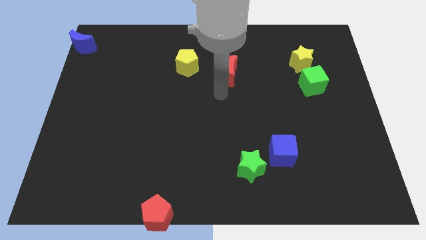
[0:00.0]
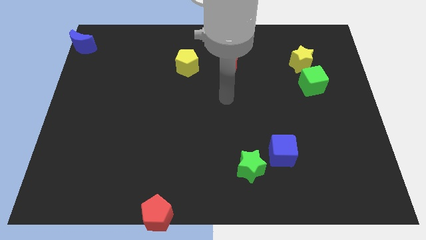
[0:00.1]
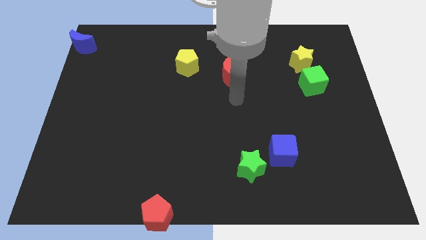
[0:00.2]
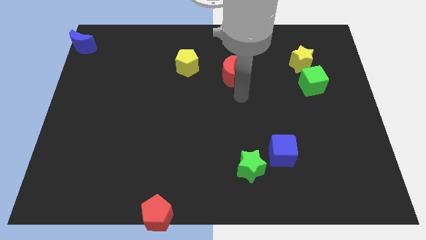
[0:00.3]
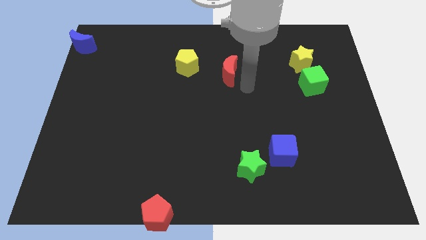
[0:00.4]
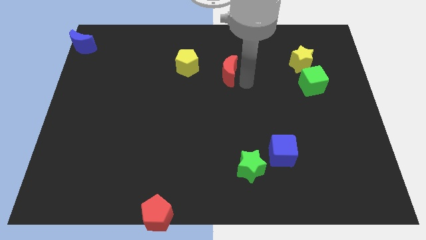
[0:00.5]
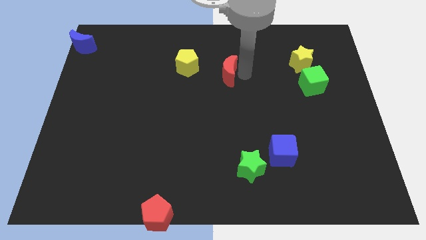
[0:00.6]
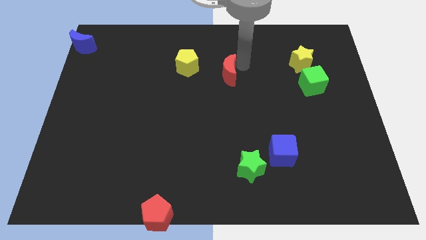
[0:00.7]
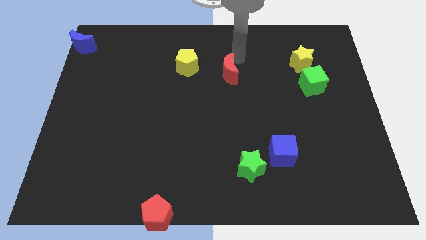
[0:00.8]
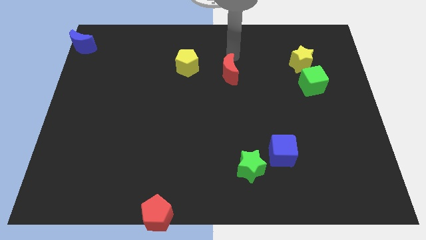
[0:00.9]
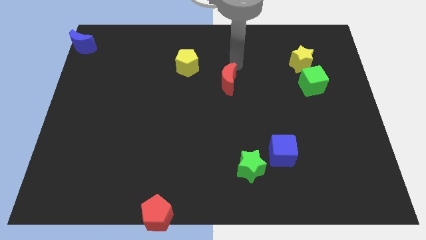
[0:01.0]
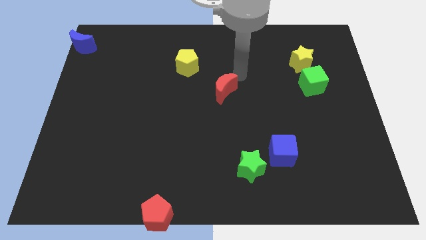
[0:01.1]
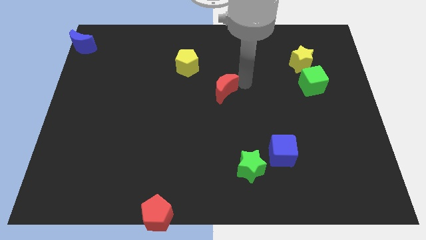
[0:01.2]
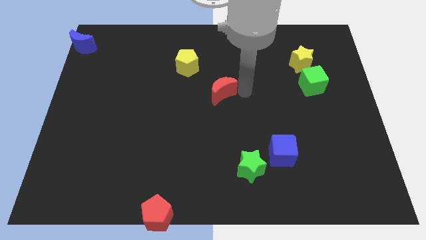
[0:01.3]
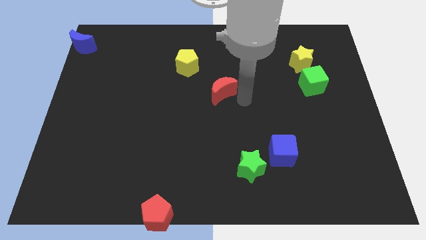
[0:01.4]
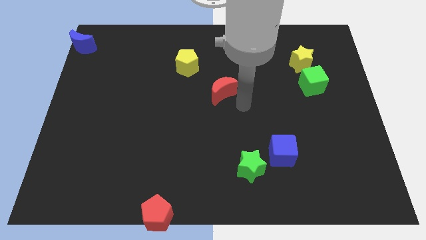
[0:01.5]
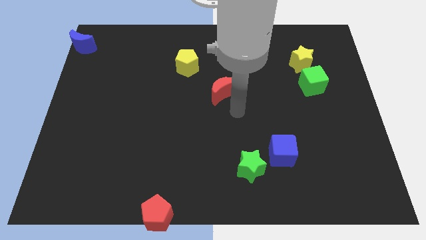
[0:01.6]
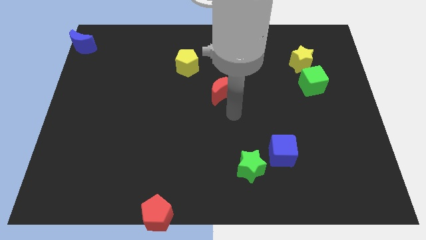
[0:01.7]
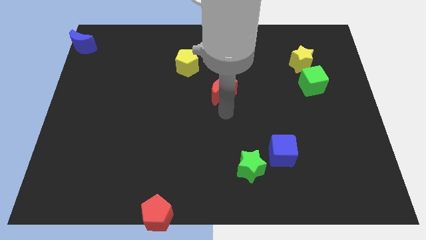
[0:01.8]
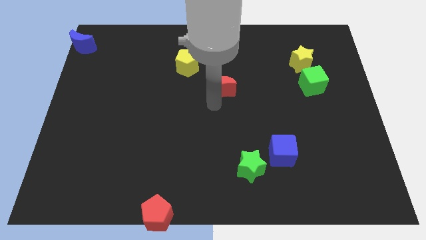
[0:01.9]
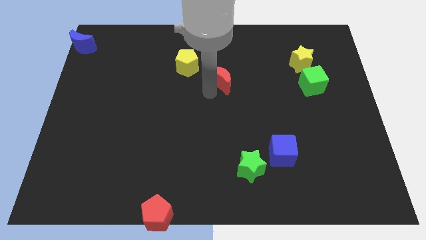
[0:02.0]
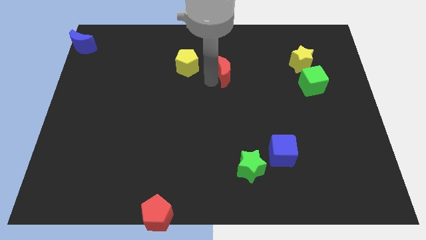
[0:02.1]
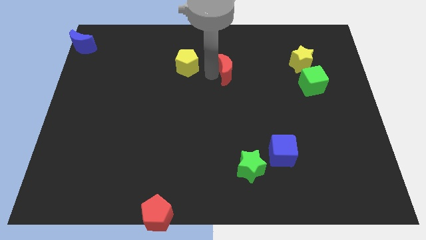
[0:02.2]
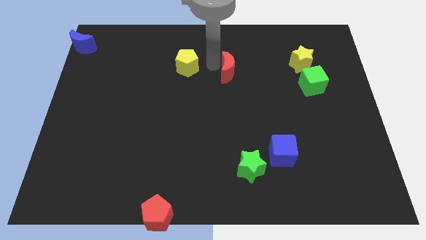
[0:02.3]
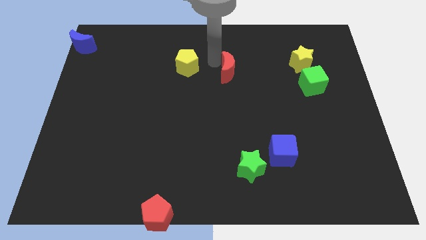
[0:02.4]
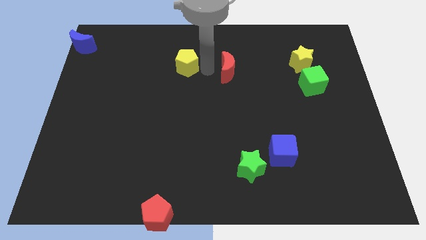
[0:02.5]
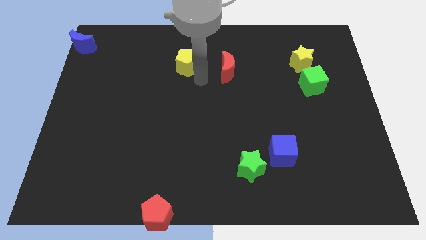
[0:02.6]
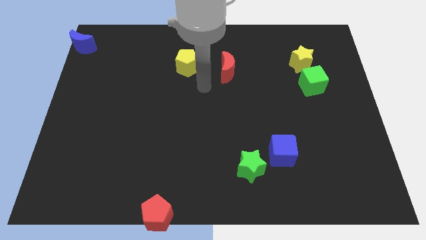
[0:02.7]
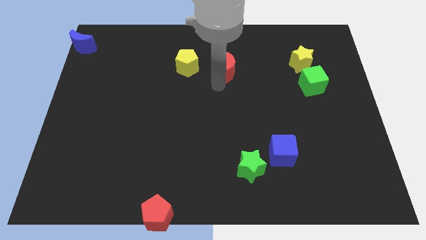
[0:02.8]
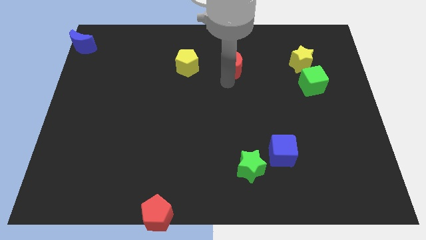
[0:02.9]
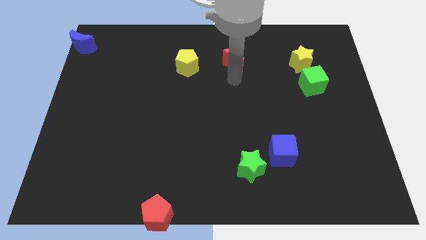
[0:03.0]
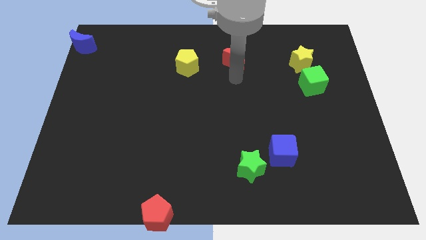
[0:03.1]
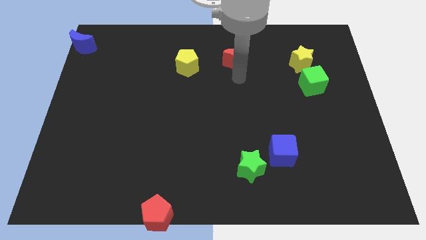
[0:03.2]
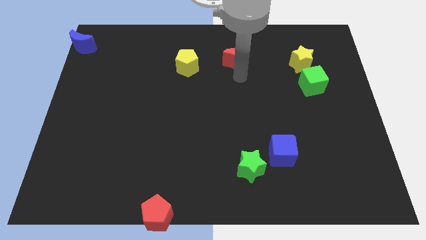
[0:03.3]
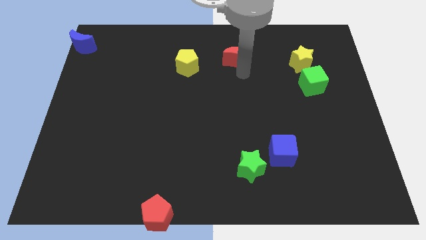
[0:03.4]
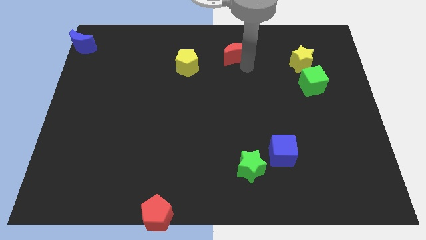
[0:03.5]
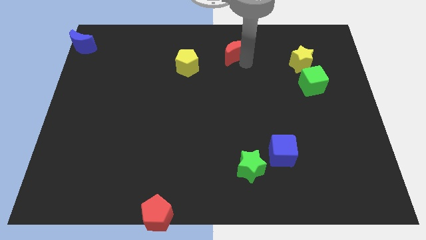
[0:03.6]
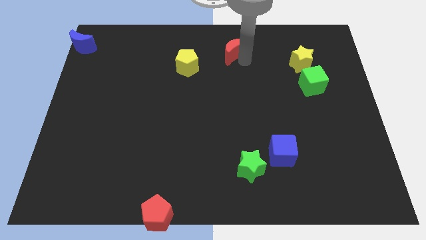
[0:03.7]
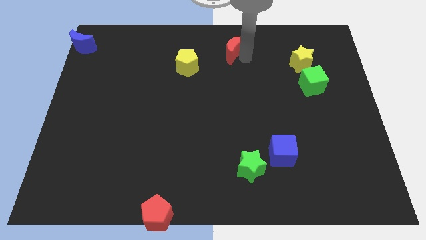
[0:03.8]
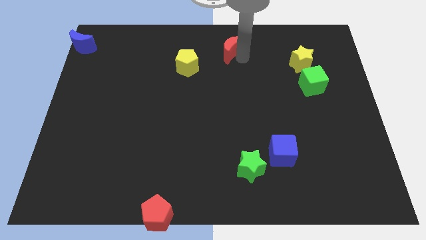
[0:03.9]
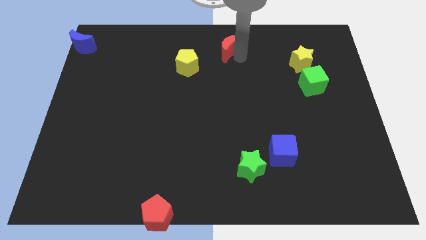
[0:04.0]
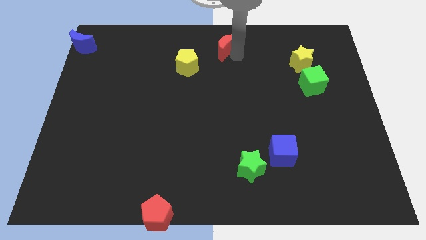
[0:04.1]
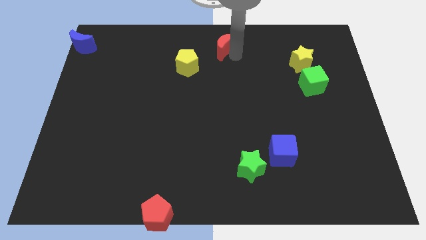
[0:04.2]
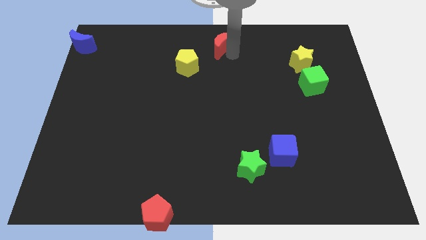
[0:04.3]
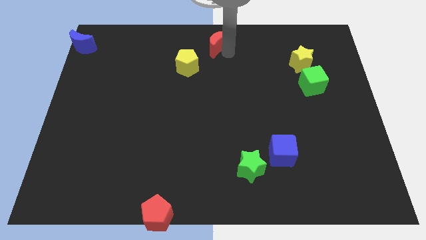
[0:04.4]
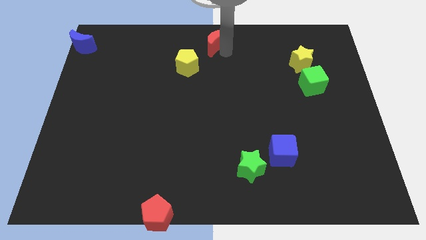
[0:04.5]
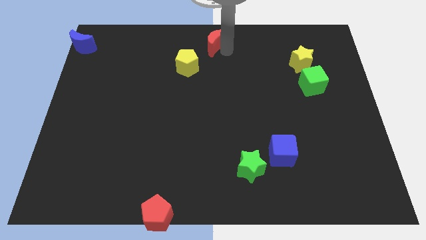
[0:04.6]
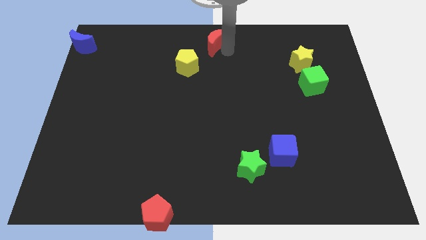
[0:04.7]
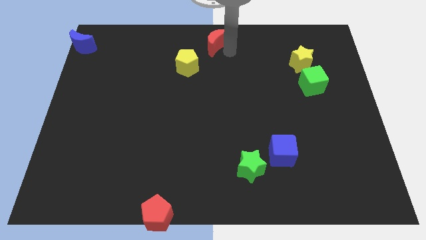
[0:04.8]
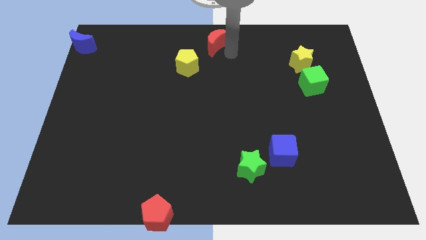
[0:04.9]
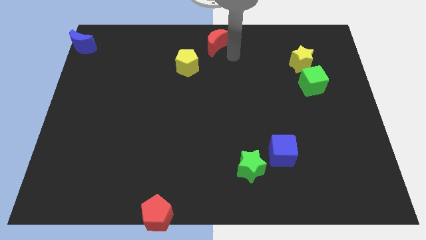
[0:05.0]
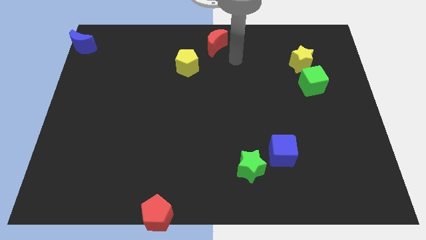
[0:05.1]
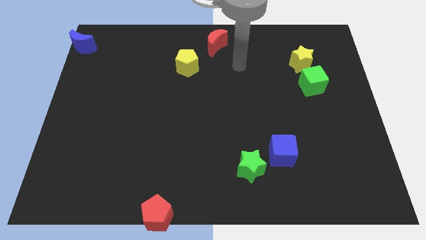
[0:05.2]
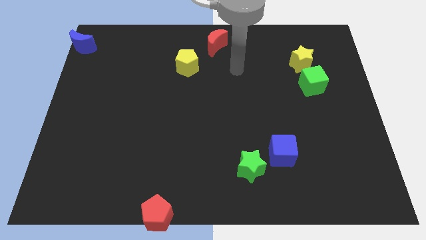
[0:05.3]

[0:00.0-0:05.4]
move the red crescent diagonally right of the yellow pentagon

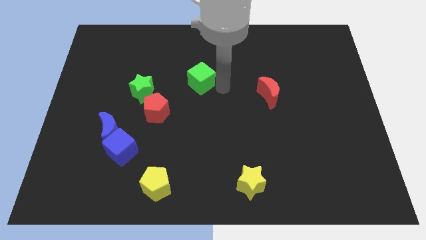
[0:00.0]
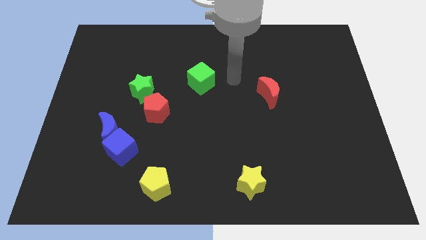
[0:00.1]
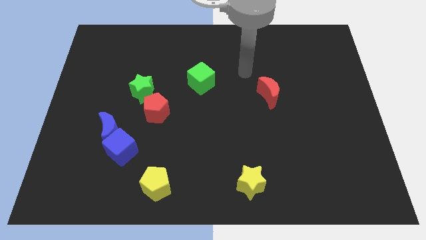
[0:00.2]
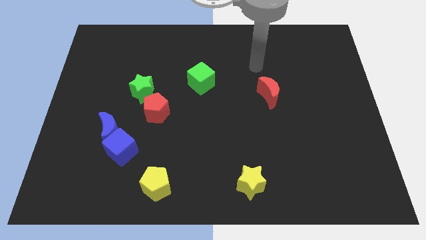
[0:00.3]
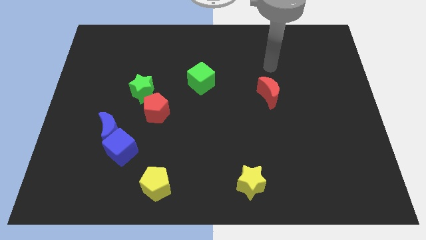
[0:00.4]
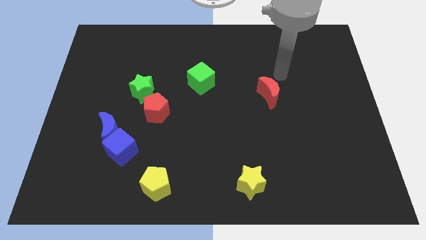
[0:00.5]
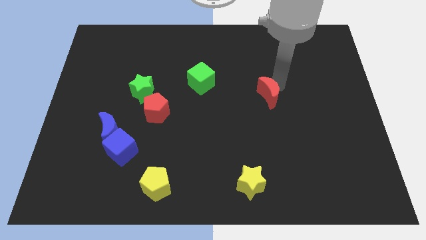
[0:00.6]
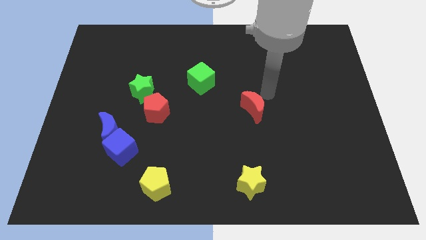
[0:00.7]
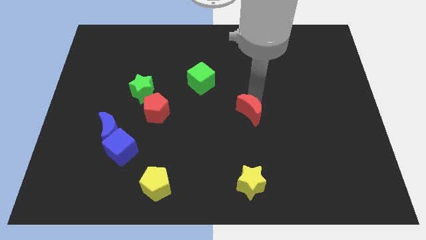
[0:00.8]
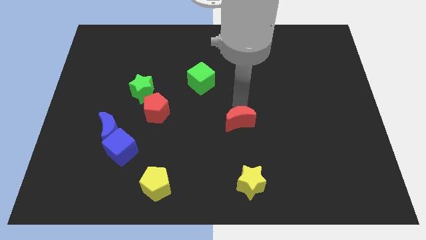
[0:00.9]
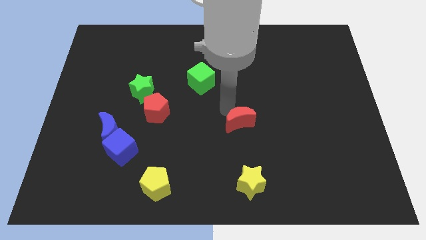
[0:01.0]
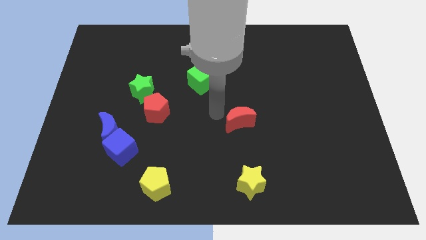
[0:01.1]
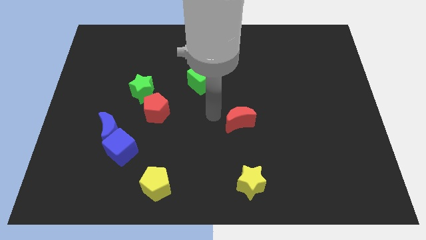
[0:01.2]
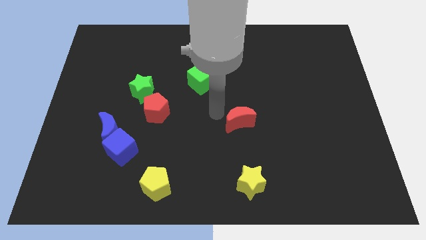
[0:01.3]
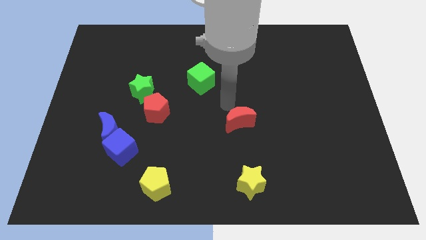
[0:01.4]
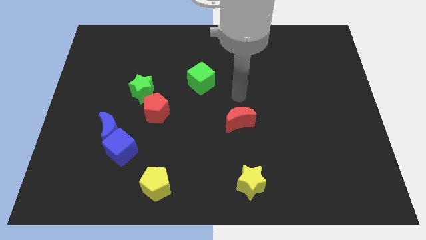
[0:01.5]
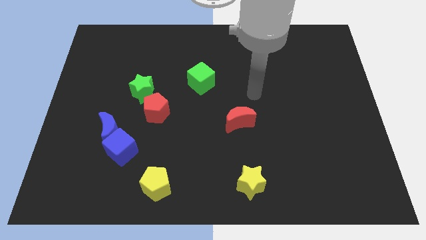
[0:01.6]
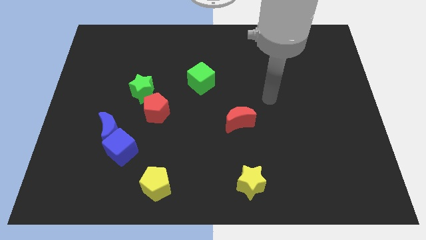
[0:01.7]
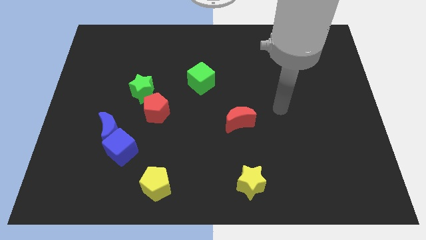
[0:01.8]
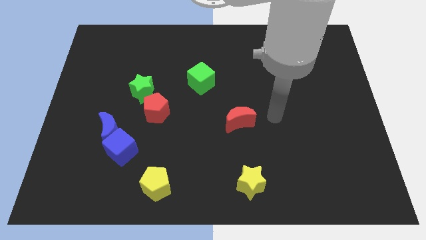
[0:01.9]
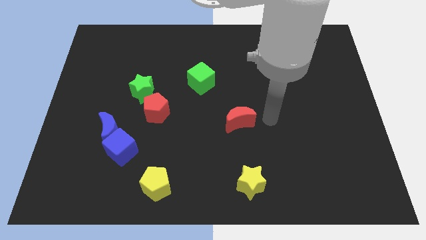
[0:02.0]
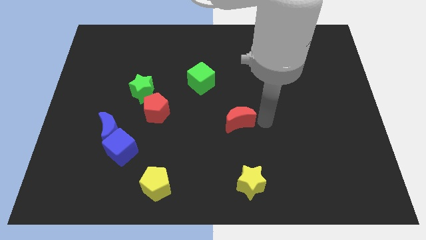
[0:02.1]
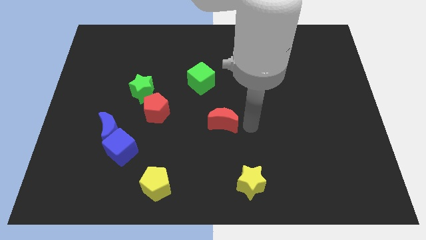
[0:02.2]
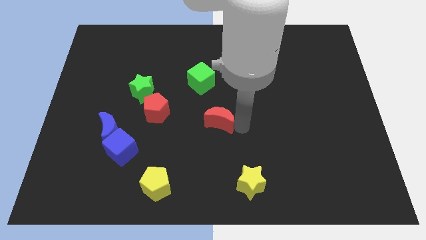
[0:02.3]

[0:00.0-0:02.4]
move the arm away from the green cube

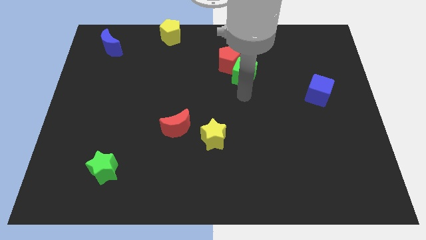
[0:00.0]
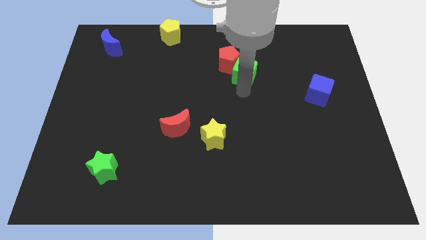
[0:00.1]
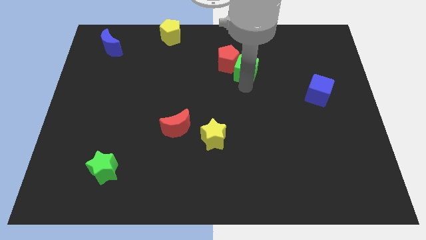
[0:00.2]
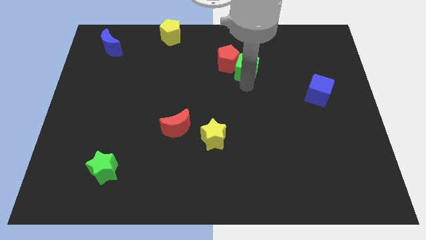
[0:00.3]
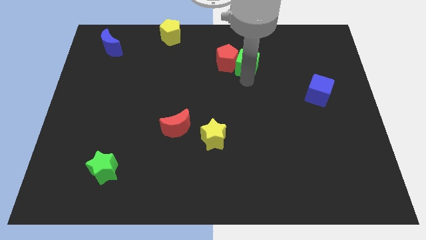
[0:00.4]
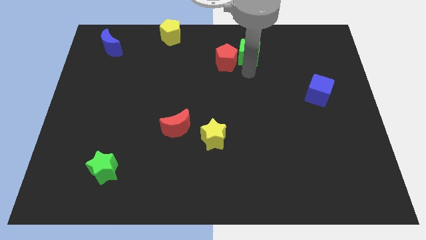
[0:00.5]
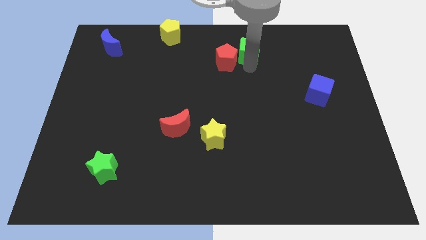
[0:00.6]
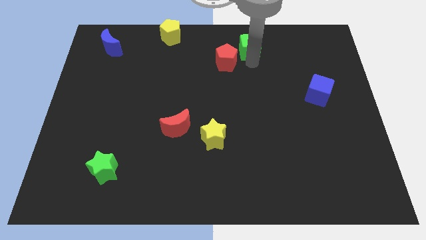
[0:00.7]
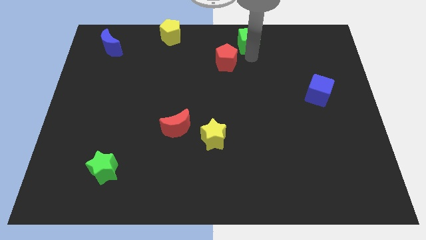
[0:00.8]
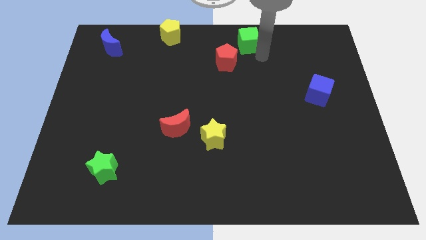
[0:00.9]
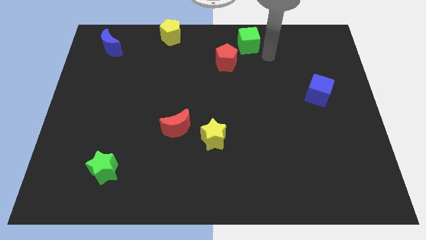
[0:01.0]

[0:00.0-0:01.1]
separate the green cube and red pentagon
